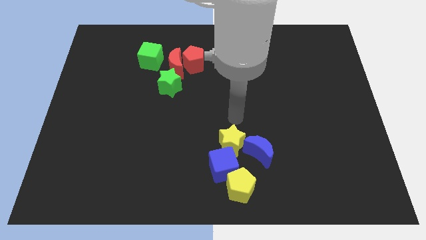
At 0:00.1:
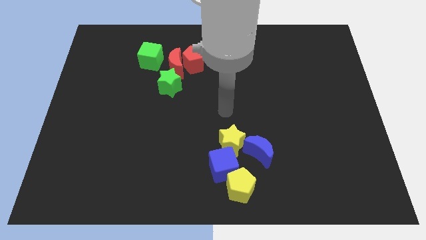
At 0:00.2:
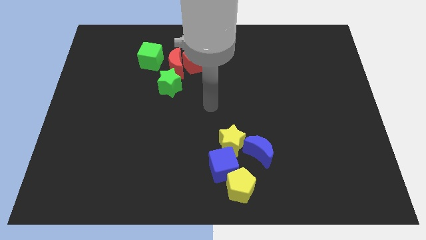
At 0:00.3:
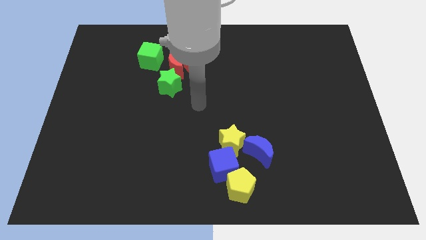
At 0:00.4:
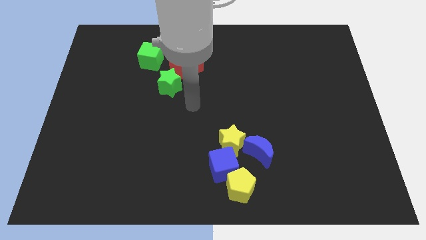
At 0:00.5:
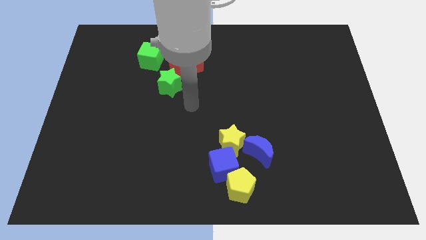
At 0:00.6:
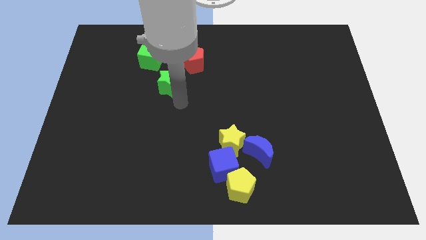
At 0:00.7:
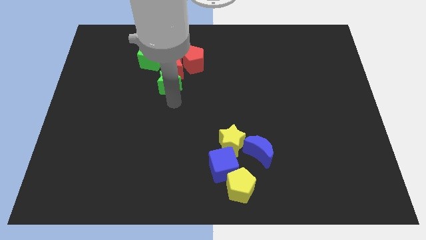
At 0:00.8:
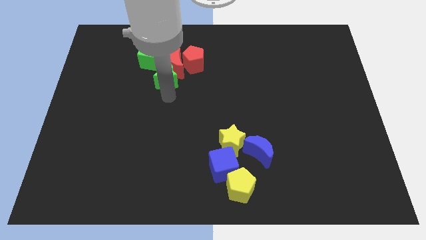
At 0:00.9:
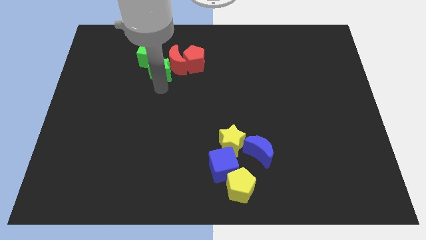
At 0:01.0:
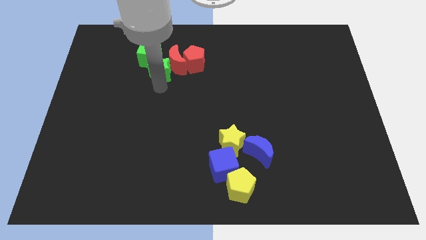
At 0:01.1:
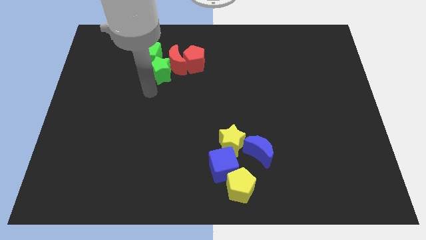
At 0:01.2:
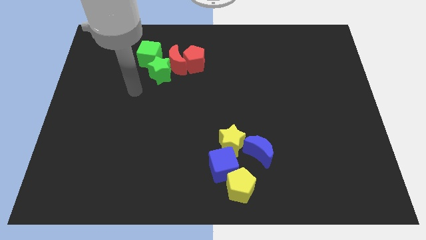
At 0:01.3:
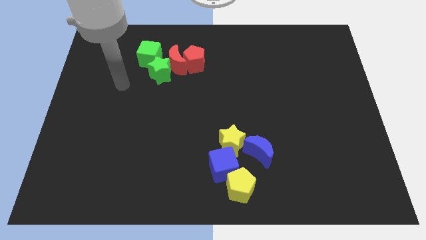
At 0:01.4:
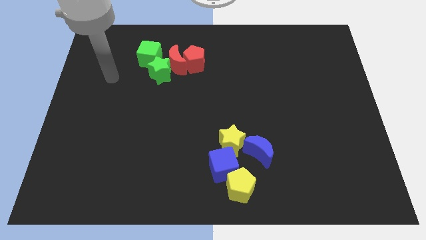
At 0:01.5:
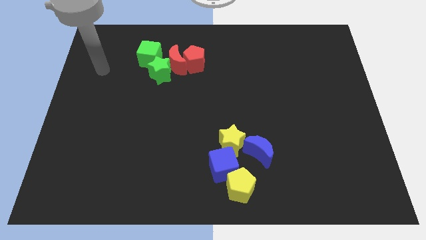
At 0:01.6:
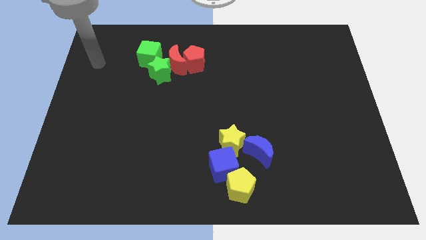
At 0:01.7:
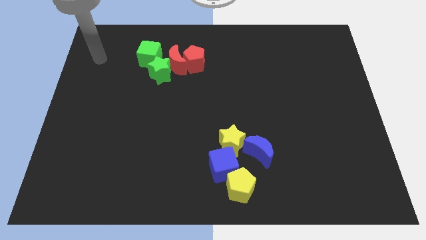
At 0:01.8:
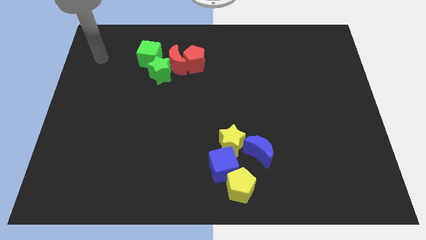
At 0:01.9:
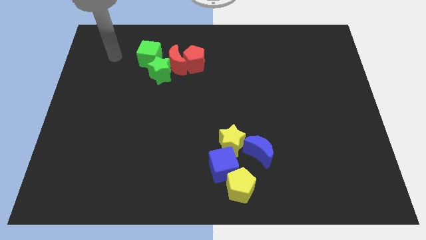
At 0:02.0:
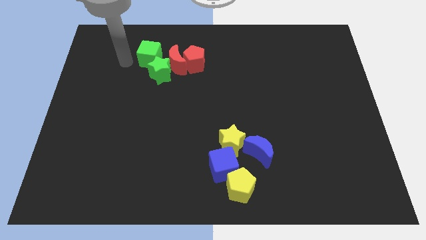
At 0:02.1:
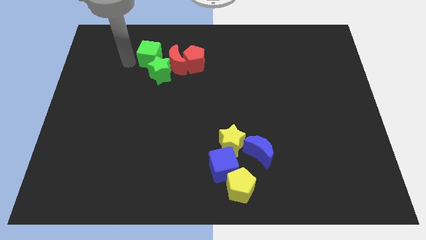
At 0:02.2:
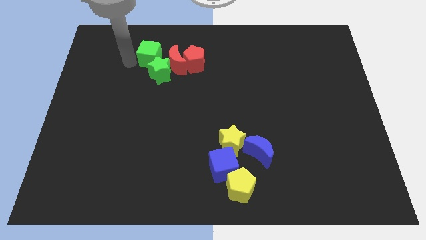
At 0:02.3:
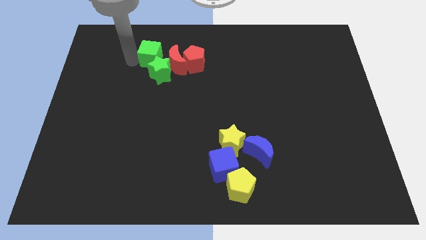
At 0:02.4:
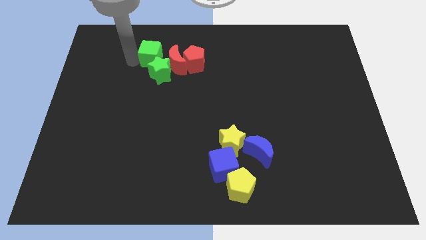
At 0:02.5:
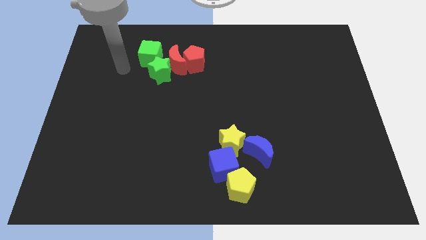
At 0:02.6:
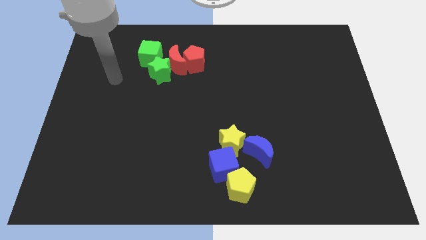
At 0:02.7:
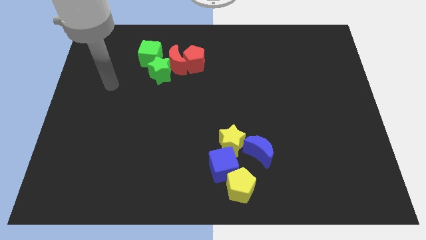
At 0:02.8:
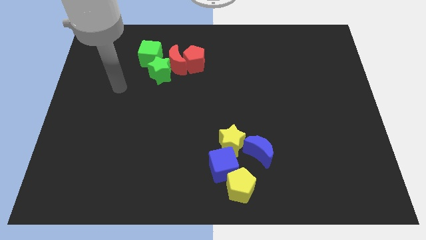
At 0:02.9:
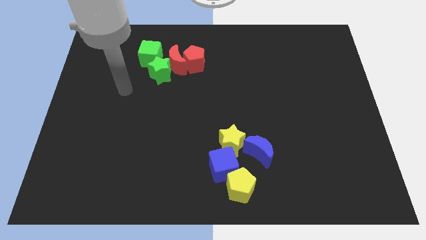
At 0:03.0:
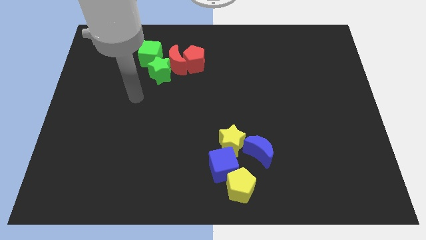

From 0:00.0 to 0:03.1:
move the green star into the green cube

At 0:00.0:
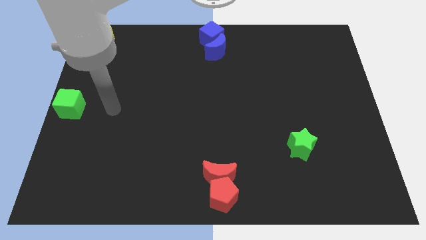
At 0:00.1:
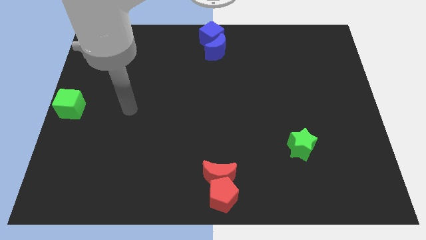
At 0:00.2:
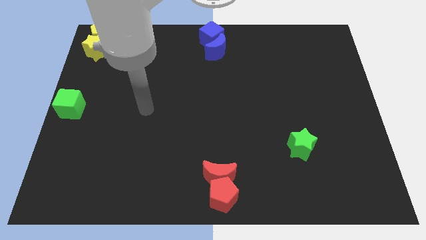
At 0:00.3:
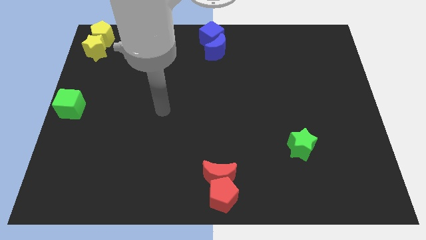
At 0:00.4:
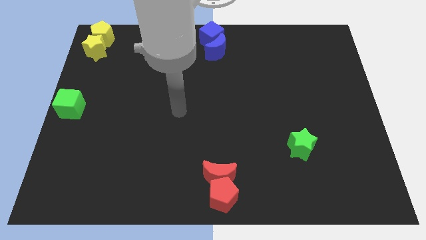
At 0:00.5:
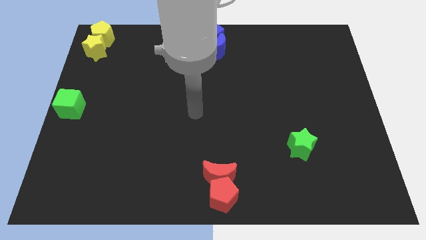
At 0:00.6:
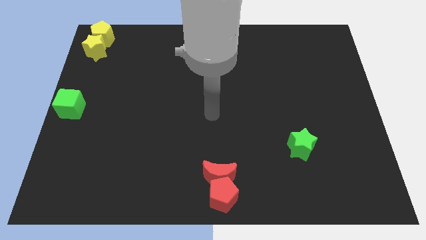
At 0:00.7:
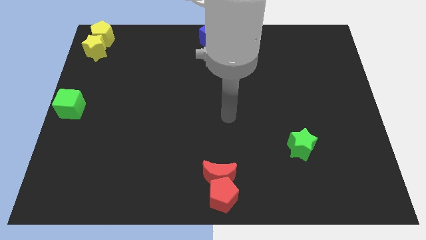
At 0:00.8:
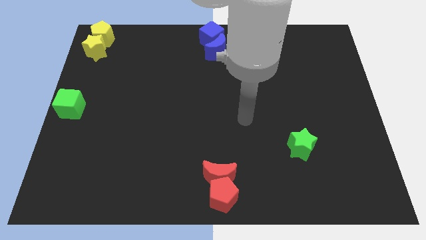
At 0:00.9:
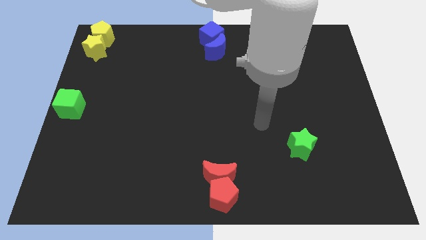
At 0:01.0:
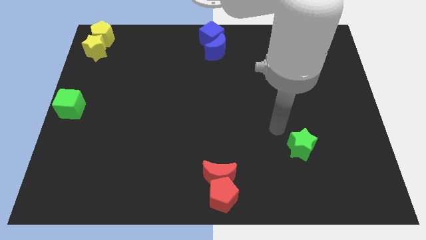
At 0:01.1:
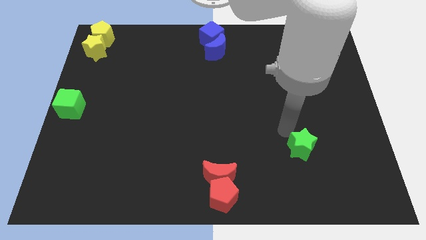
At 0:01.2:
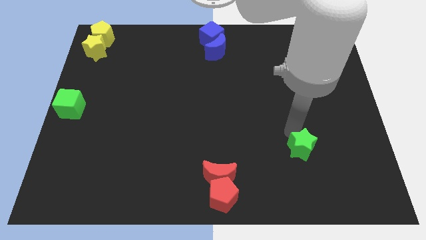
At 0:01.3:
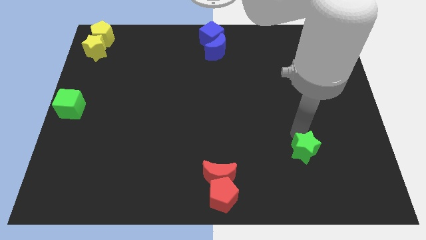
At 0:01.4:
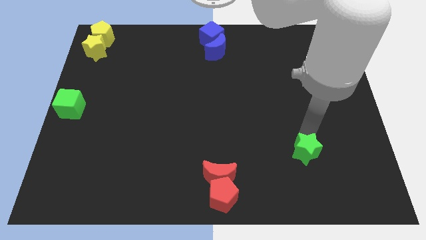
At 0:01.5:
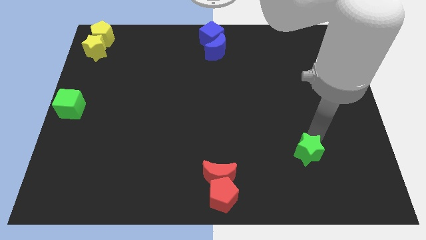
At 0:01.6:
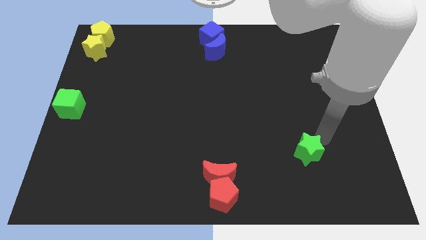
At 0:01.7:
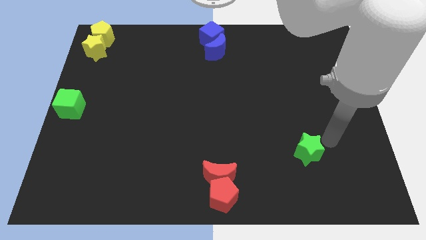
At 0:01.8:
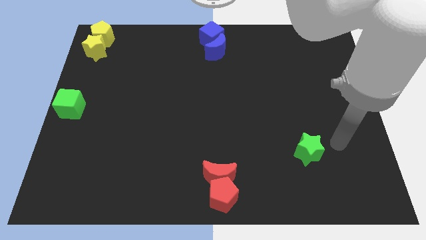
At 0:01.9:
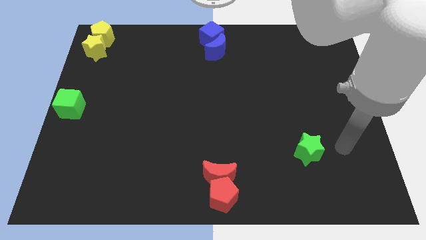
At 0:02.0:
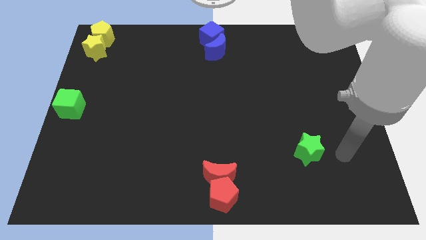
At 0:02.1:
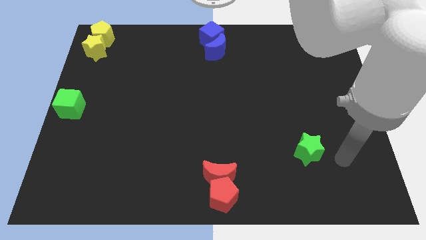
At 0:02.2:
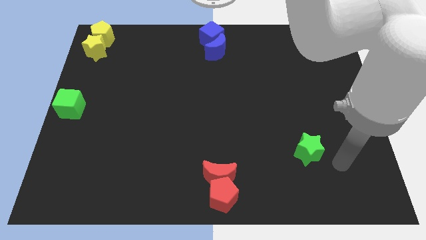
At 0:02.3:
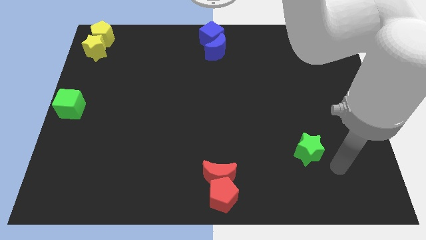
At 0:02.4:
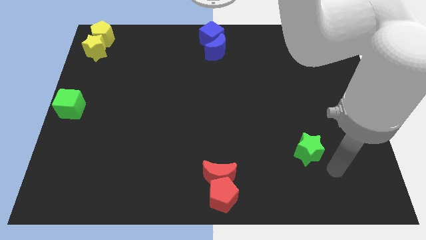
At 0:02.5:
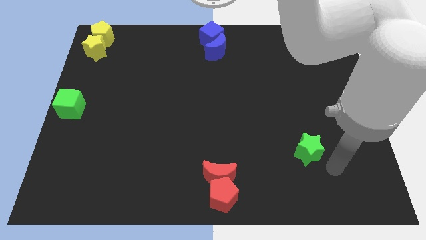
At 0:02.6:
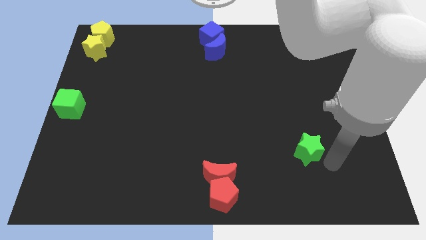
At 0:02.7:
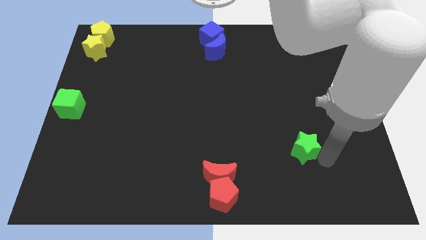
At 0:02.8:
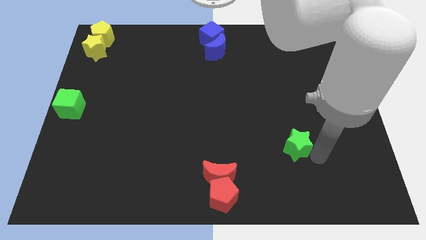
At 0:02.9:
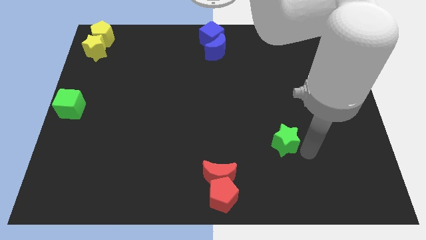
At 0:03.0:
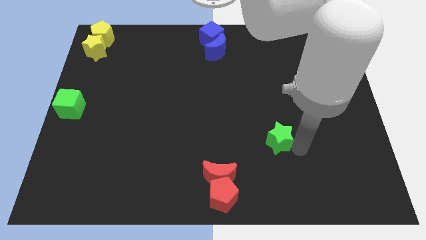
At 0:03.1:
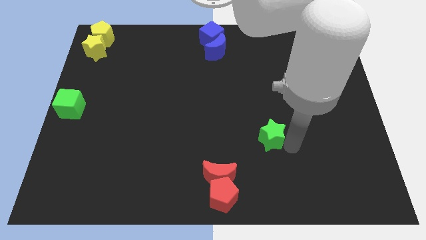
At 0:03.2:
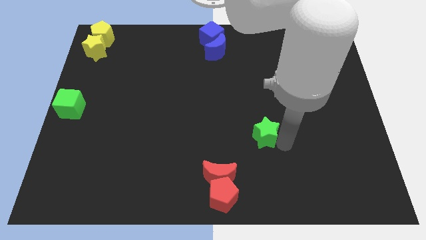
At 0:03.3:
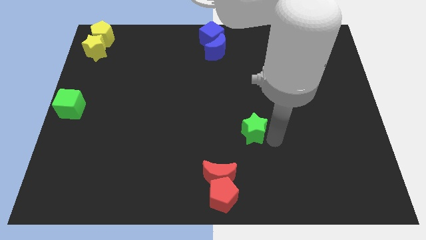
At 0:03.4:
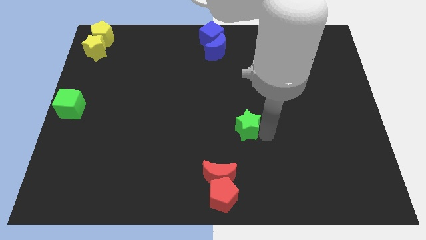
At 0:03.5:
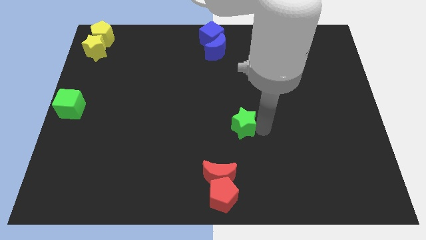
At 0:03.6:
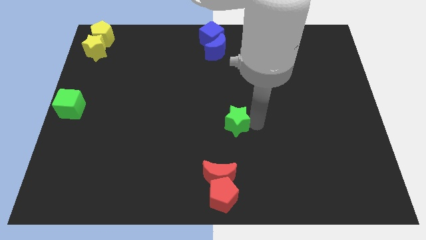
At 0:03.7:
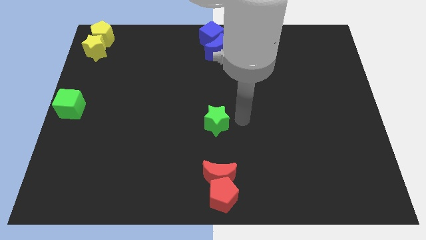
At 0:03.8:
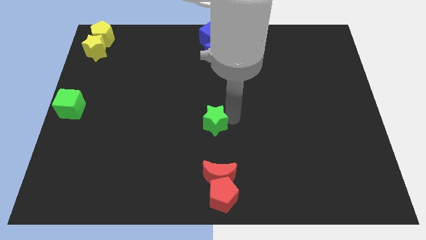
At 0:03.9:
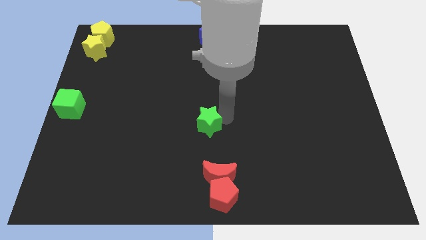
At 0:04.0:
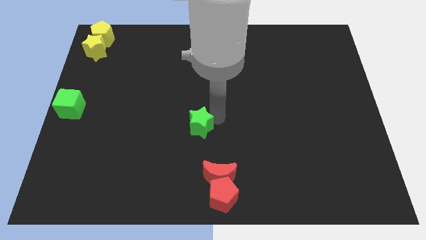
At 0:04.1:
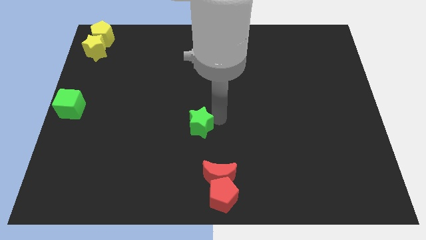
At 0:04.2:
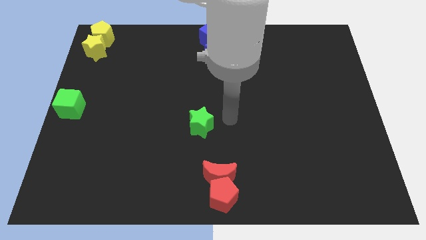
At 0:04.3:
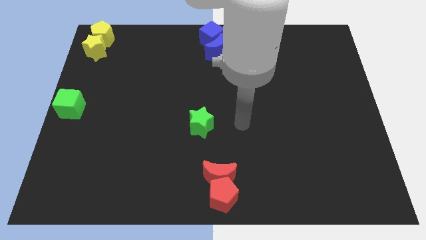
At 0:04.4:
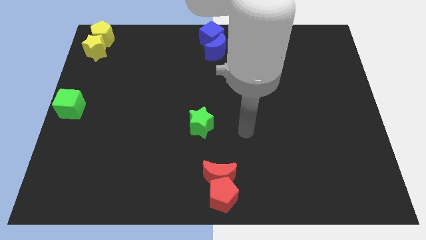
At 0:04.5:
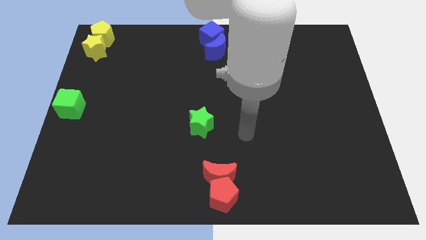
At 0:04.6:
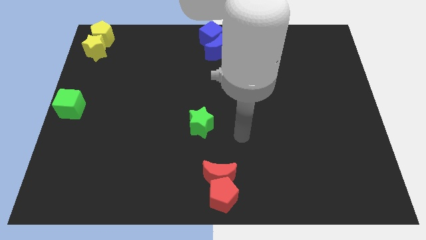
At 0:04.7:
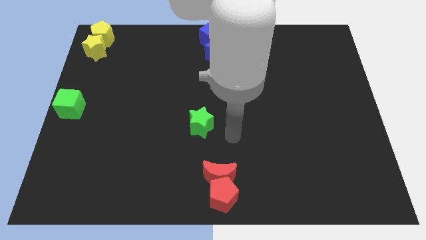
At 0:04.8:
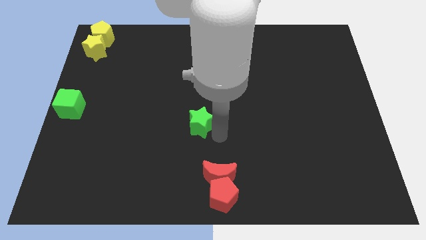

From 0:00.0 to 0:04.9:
push the green star to the center of the board

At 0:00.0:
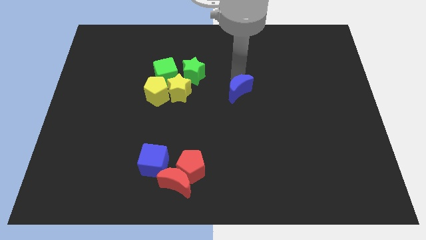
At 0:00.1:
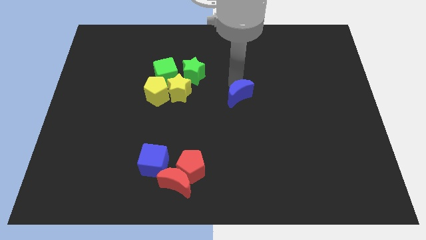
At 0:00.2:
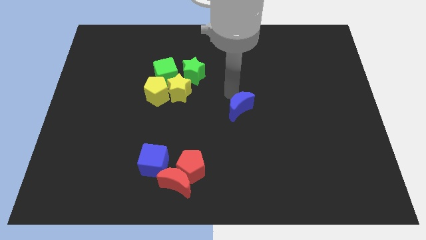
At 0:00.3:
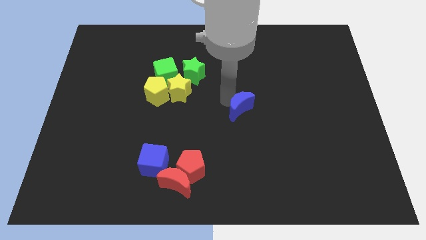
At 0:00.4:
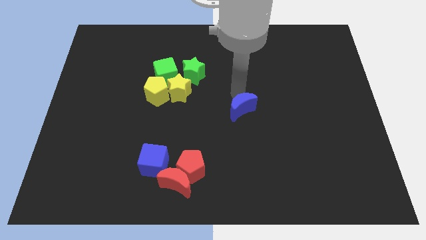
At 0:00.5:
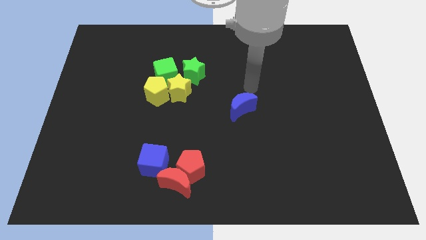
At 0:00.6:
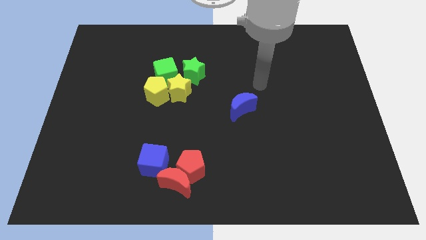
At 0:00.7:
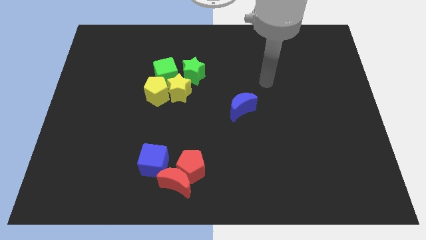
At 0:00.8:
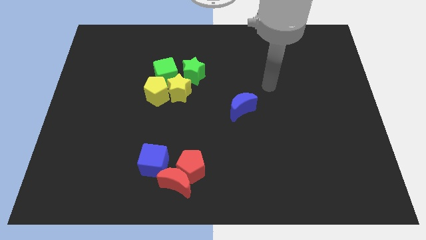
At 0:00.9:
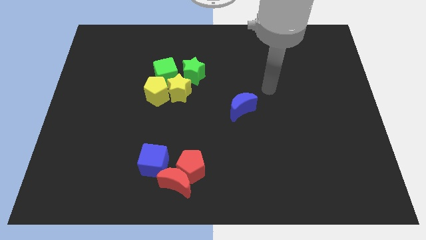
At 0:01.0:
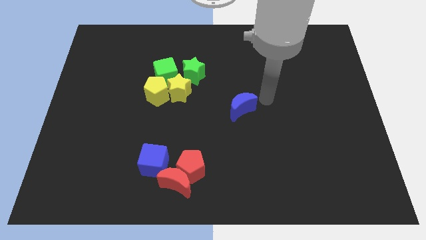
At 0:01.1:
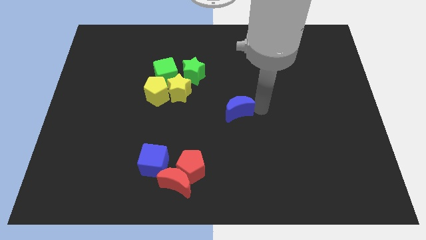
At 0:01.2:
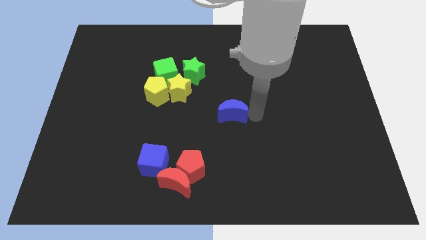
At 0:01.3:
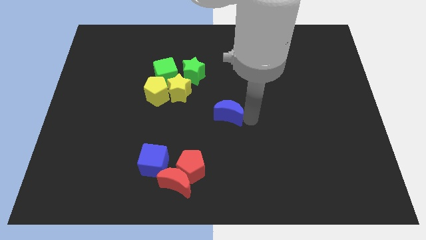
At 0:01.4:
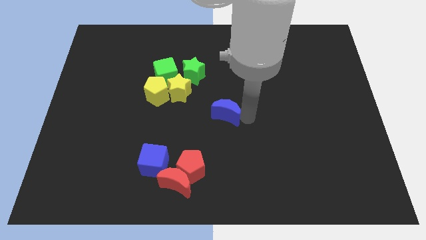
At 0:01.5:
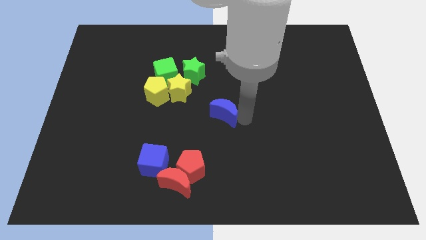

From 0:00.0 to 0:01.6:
move blue moon towards bottom of the board
